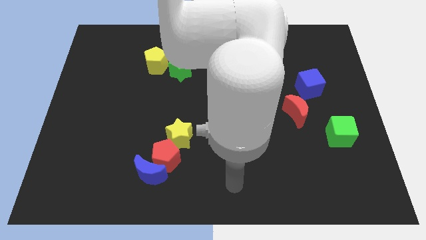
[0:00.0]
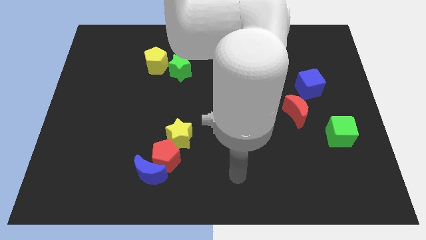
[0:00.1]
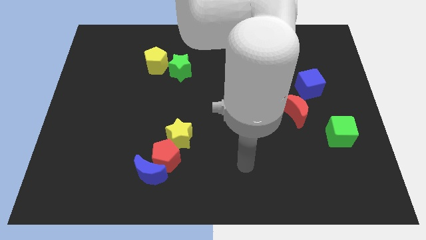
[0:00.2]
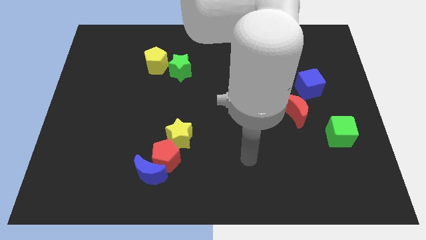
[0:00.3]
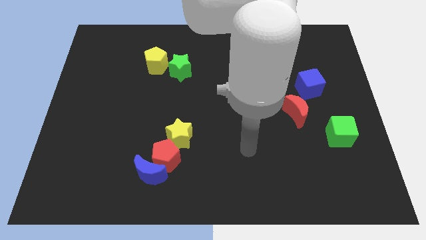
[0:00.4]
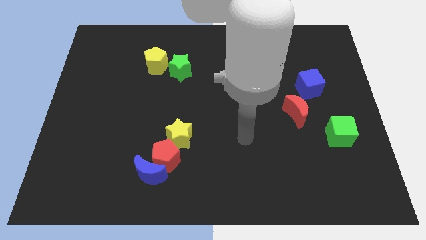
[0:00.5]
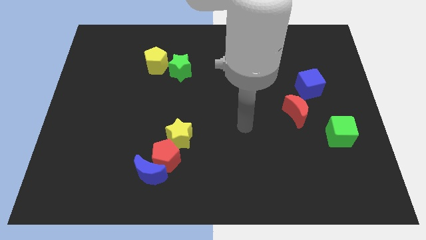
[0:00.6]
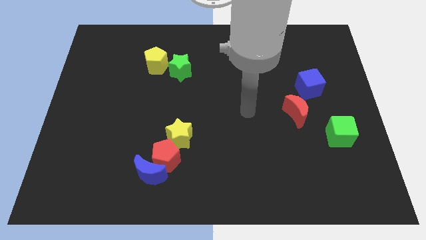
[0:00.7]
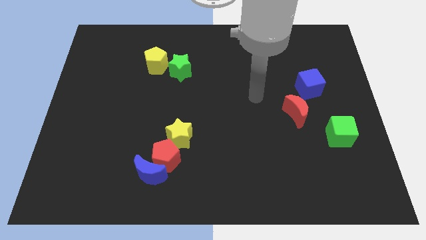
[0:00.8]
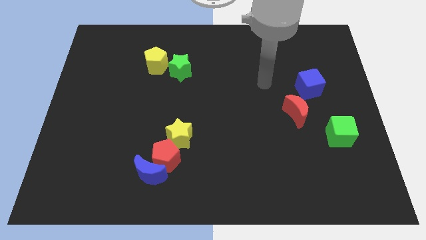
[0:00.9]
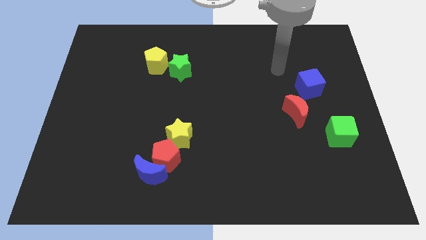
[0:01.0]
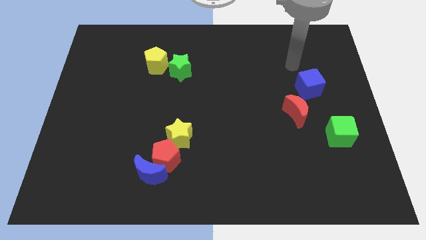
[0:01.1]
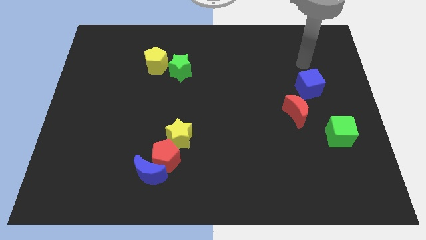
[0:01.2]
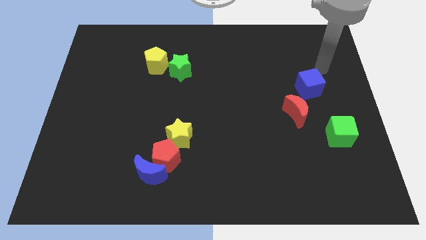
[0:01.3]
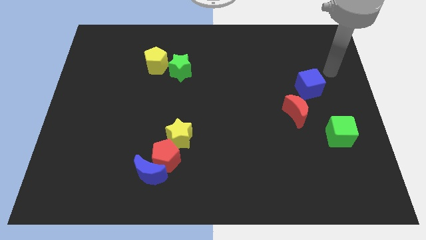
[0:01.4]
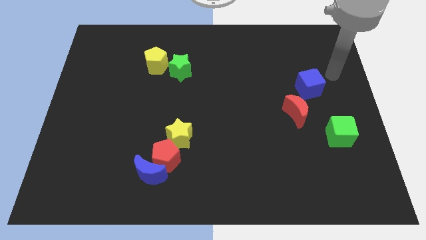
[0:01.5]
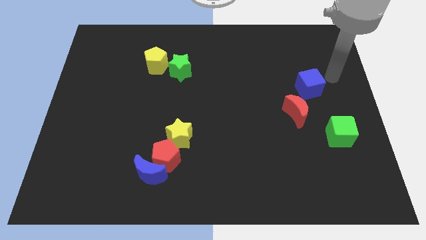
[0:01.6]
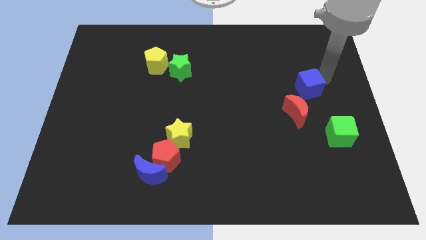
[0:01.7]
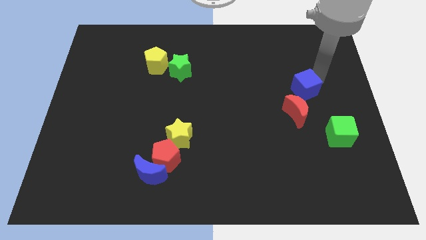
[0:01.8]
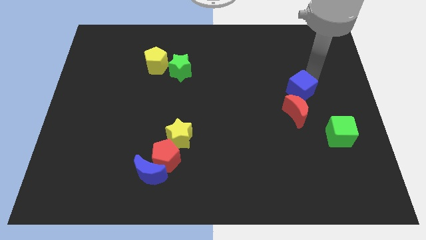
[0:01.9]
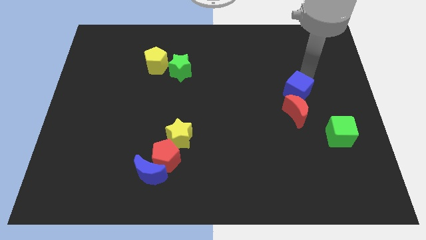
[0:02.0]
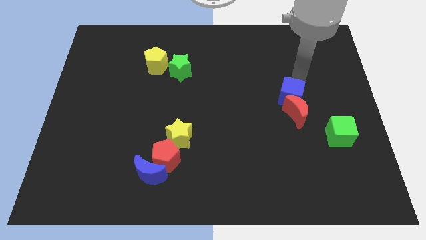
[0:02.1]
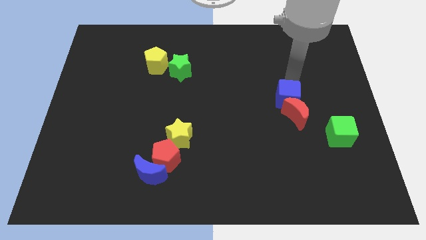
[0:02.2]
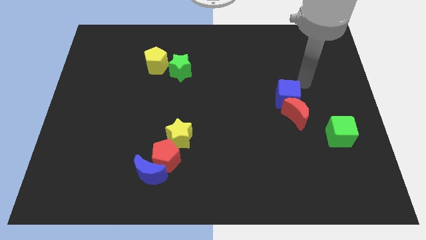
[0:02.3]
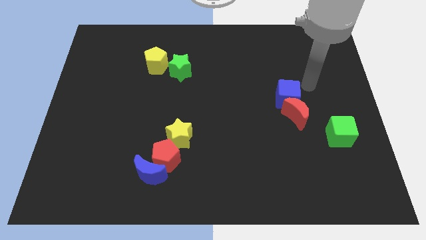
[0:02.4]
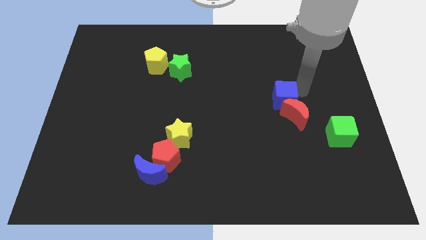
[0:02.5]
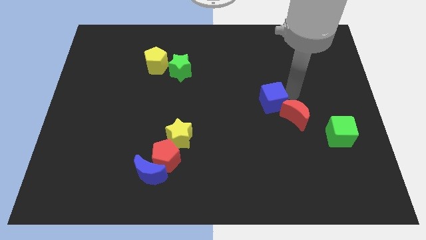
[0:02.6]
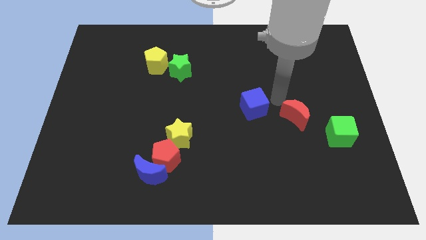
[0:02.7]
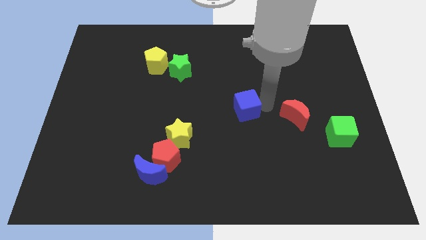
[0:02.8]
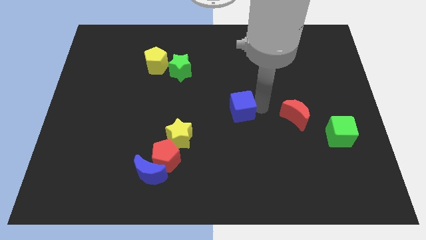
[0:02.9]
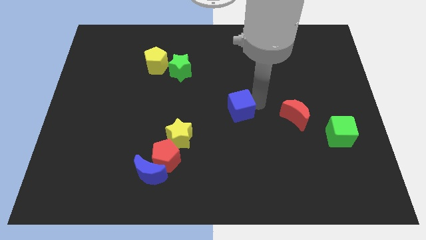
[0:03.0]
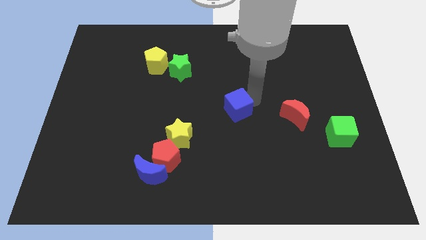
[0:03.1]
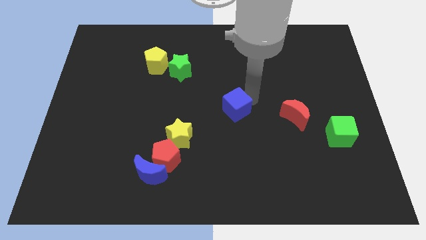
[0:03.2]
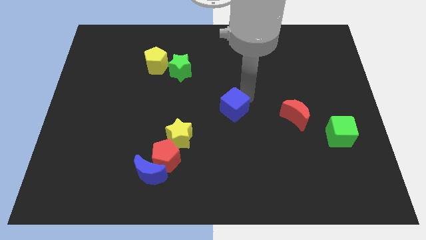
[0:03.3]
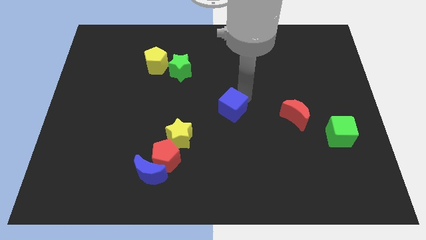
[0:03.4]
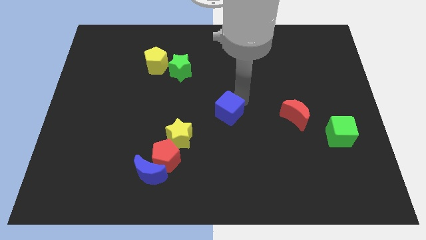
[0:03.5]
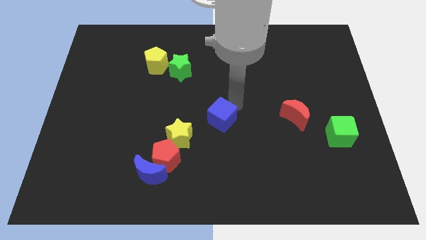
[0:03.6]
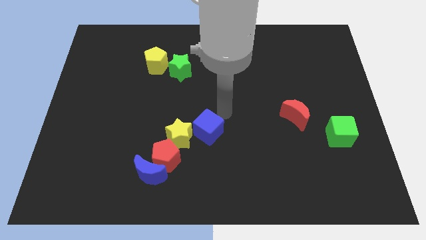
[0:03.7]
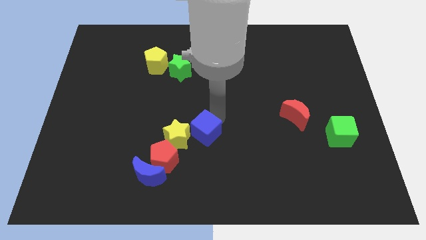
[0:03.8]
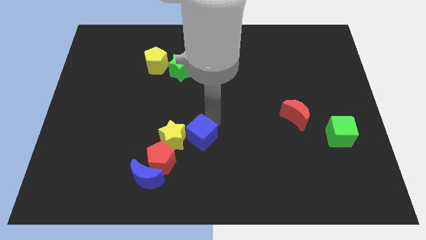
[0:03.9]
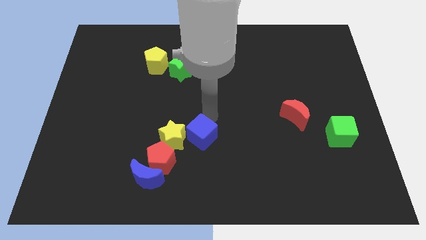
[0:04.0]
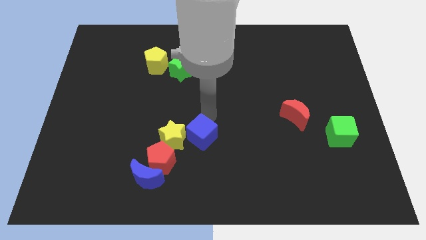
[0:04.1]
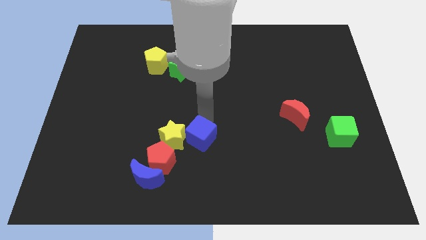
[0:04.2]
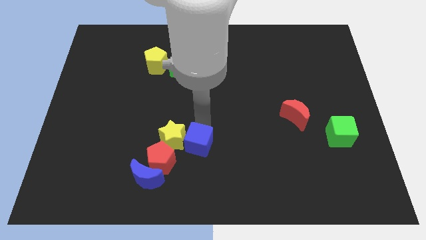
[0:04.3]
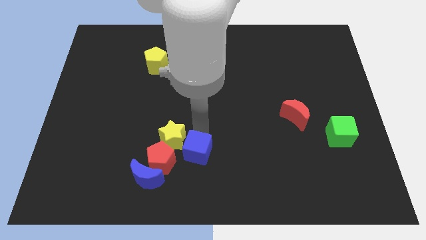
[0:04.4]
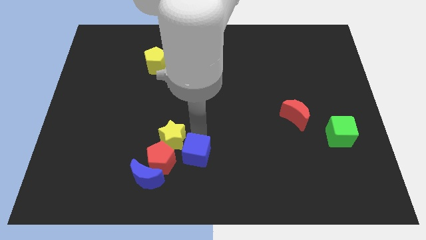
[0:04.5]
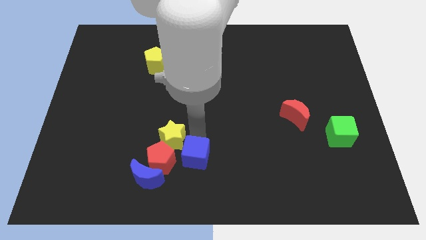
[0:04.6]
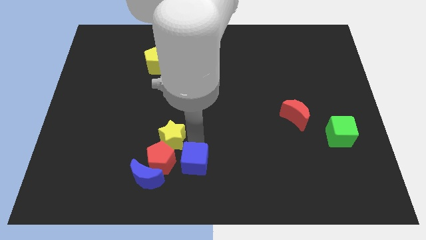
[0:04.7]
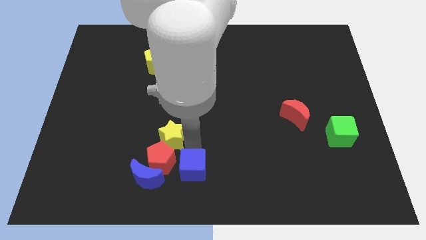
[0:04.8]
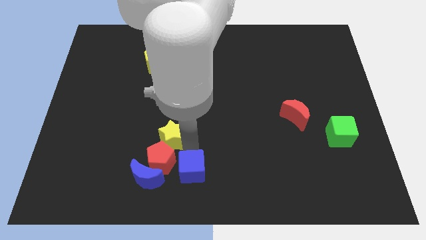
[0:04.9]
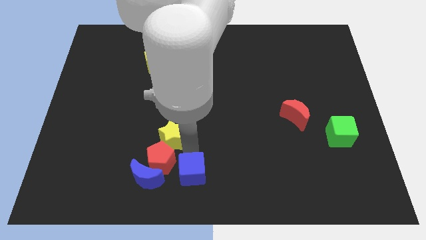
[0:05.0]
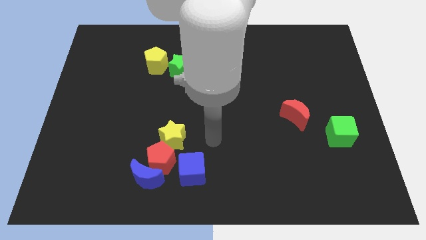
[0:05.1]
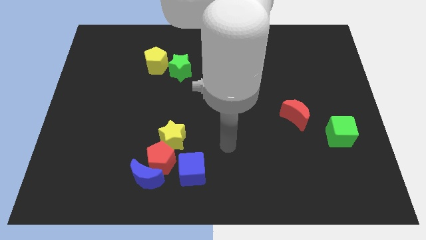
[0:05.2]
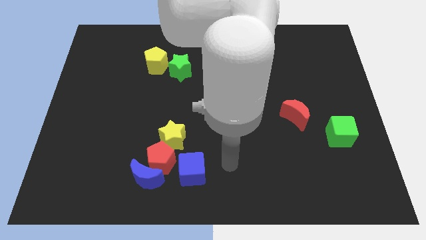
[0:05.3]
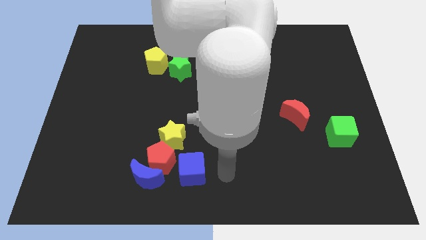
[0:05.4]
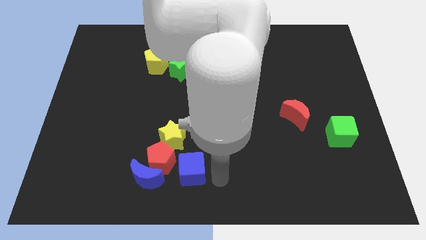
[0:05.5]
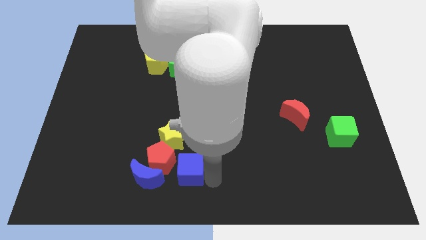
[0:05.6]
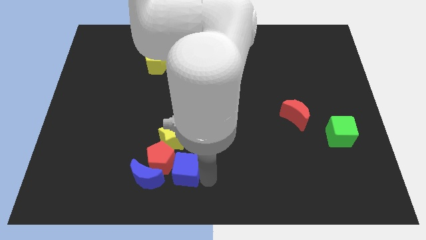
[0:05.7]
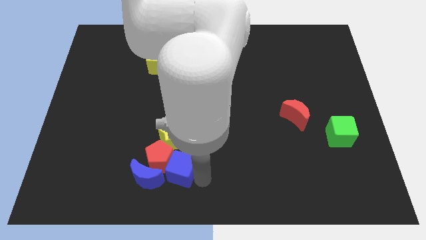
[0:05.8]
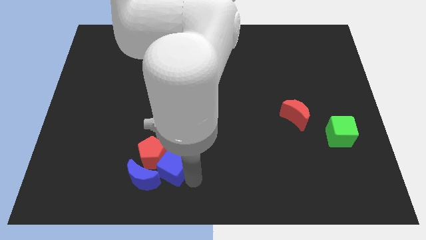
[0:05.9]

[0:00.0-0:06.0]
slide the blue cube towards the red pentagon

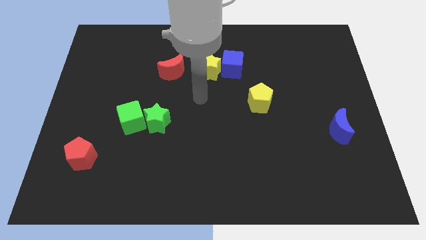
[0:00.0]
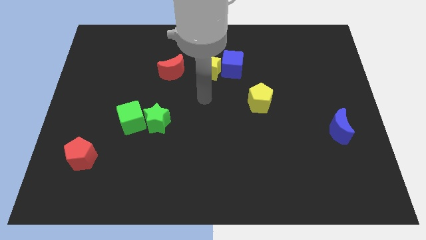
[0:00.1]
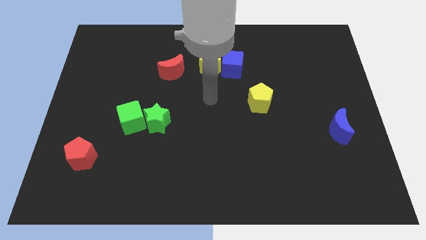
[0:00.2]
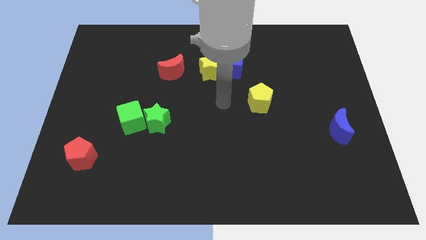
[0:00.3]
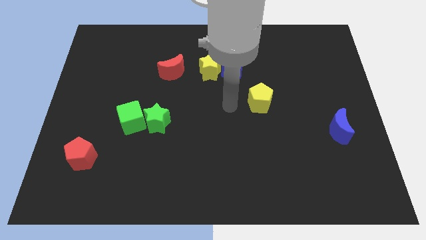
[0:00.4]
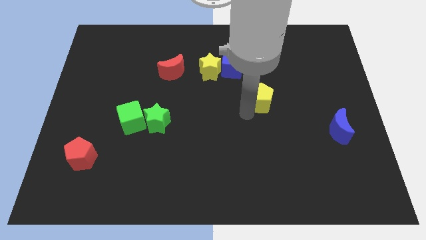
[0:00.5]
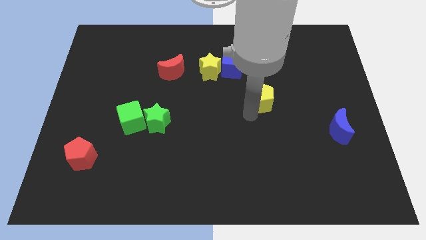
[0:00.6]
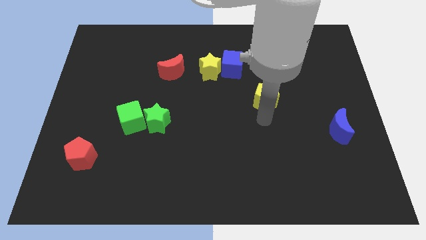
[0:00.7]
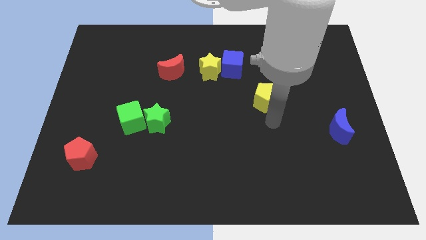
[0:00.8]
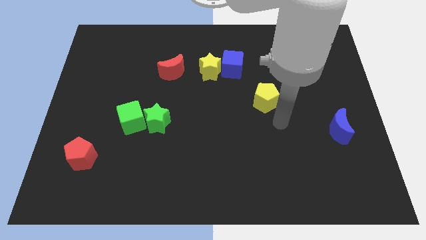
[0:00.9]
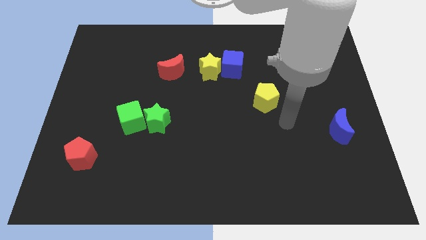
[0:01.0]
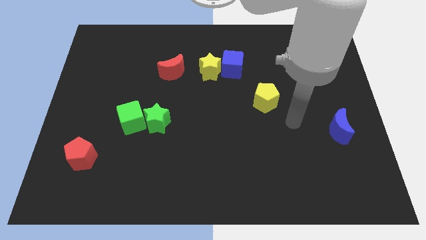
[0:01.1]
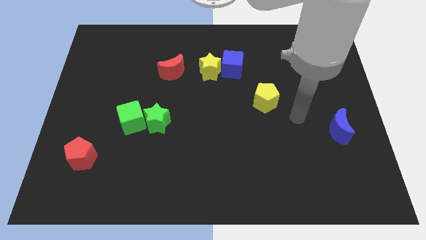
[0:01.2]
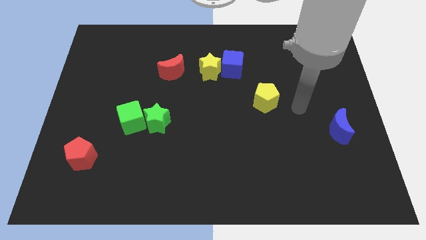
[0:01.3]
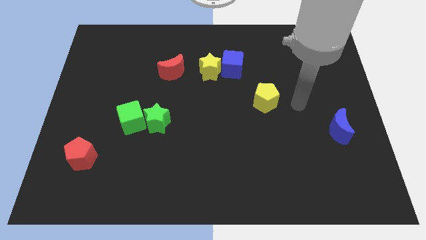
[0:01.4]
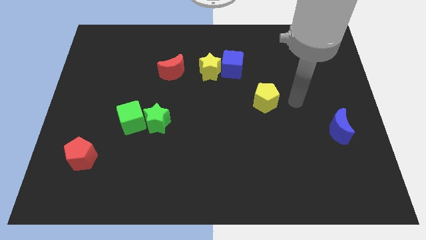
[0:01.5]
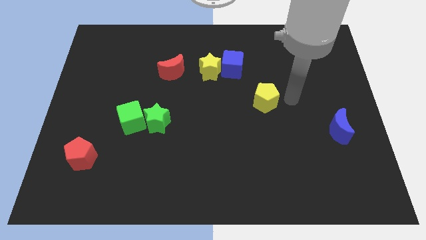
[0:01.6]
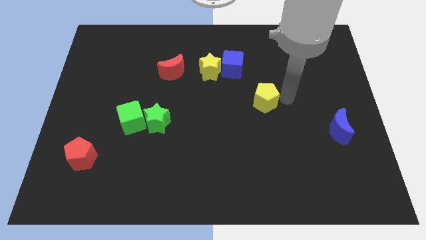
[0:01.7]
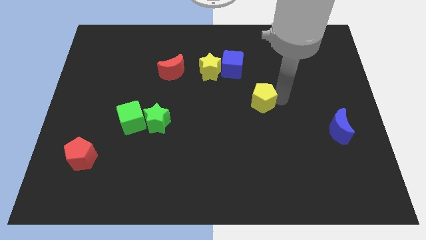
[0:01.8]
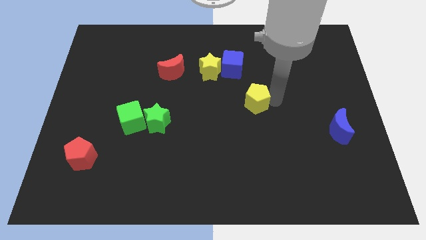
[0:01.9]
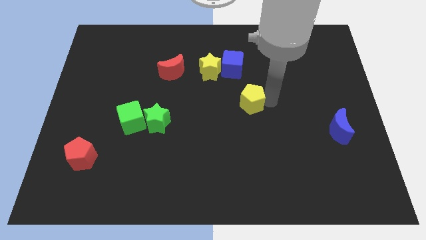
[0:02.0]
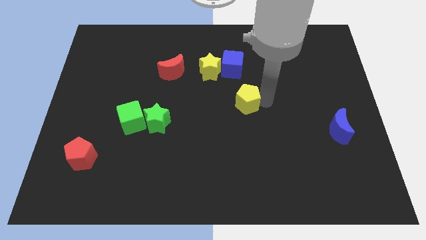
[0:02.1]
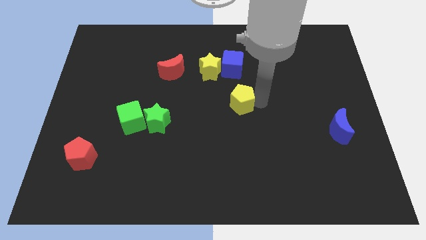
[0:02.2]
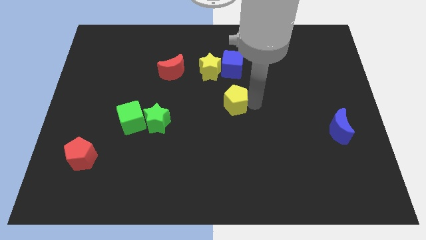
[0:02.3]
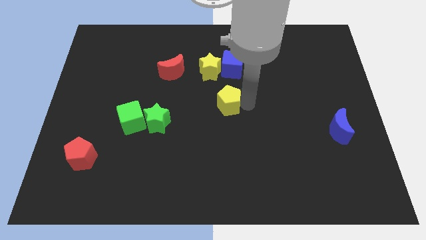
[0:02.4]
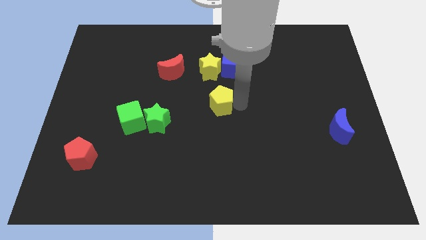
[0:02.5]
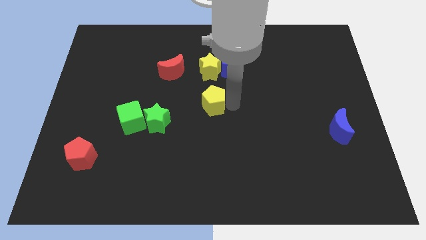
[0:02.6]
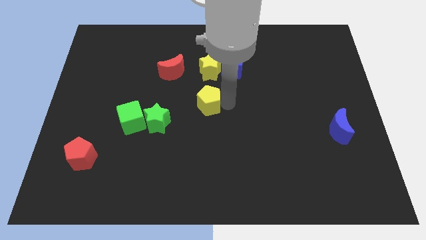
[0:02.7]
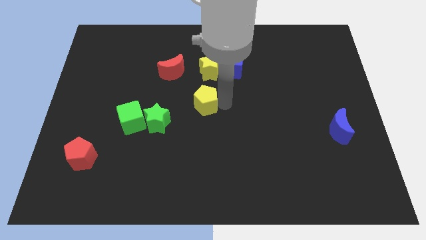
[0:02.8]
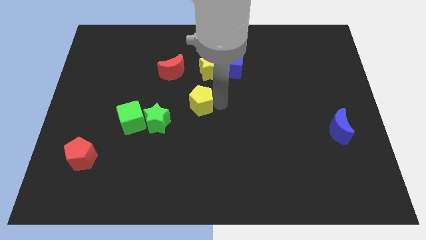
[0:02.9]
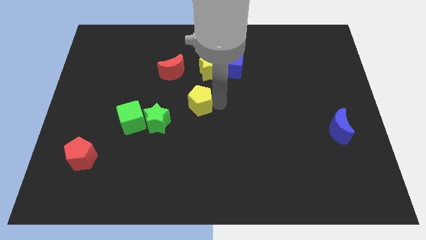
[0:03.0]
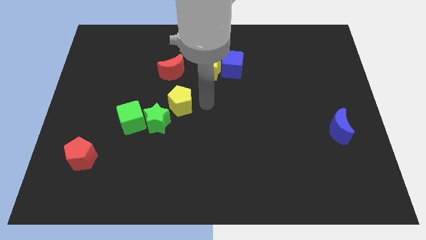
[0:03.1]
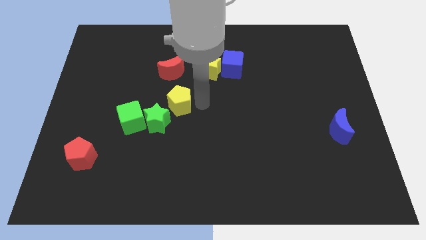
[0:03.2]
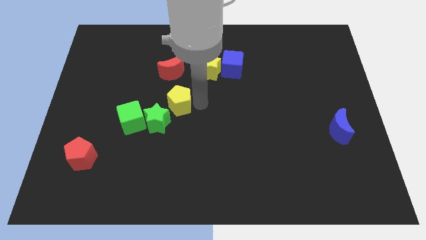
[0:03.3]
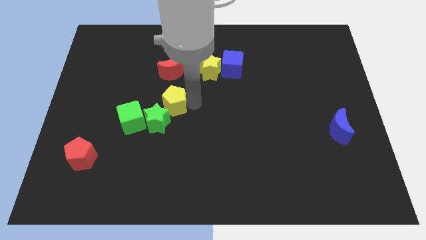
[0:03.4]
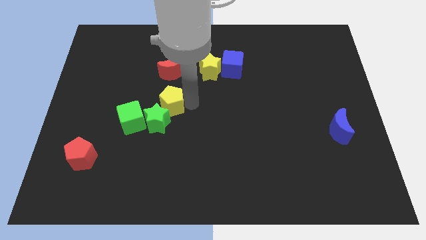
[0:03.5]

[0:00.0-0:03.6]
put the yellow pentagon towards the green star
